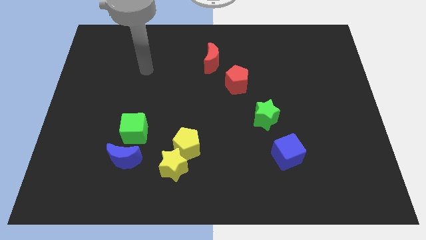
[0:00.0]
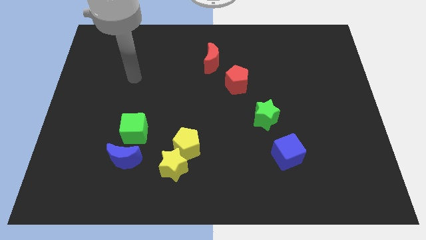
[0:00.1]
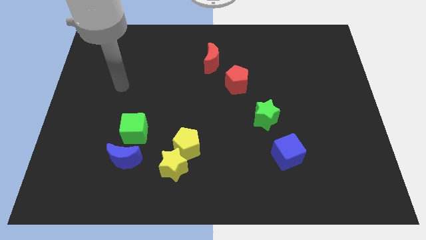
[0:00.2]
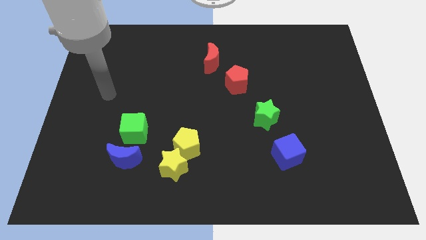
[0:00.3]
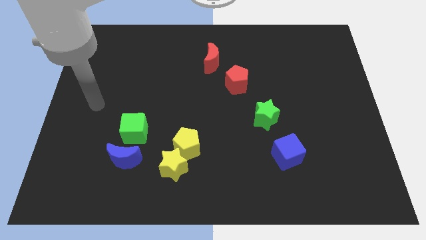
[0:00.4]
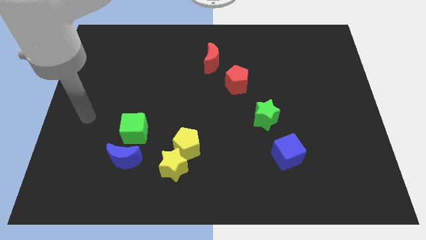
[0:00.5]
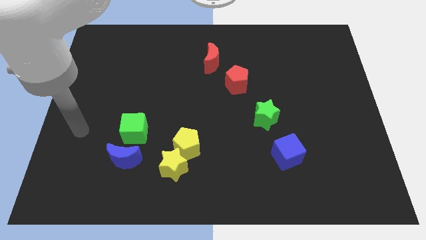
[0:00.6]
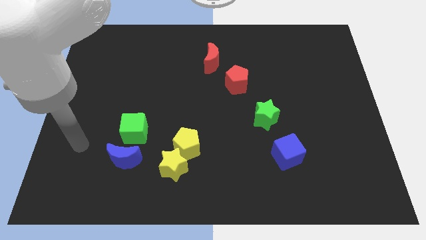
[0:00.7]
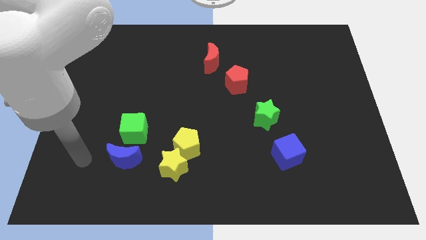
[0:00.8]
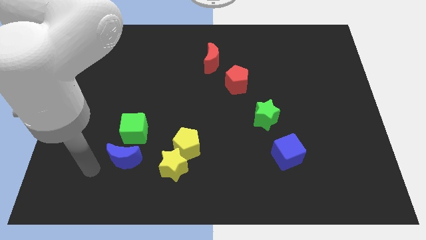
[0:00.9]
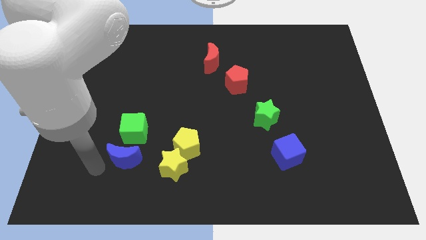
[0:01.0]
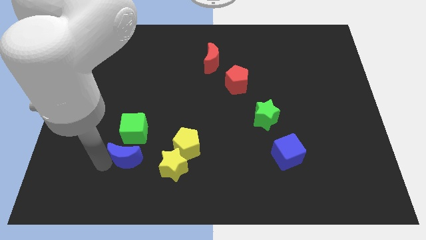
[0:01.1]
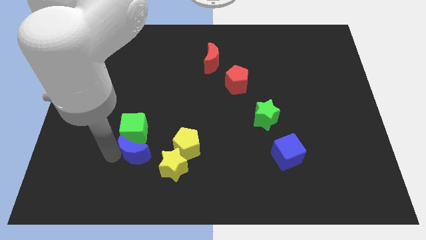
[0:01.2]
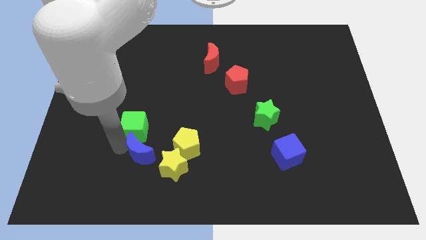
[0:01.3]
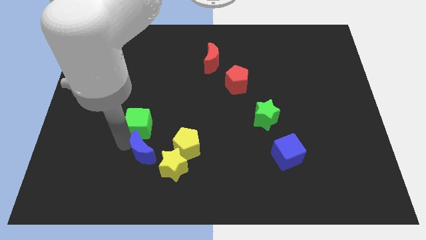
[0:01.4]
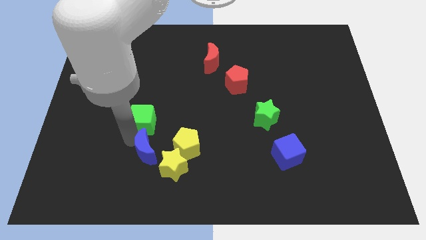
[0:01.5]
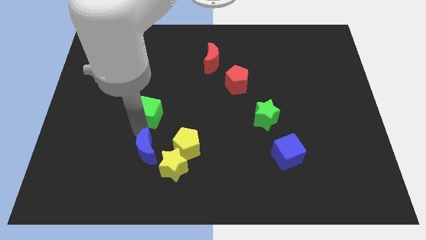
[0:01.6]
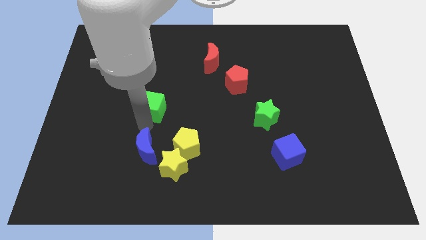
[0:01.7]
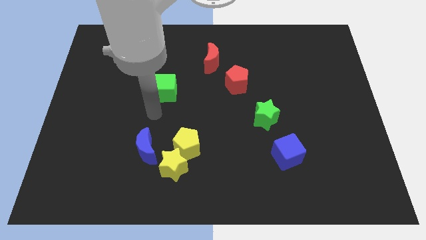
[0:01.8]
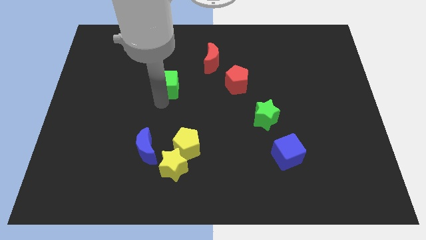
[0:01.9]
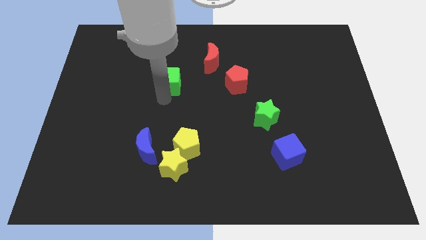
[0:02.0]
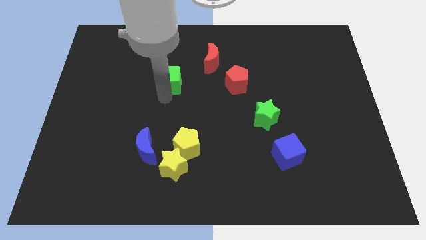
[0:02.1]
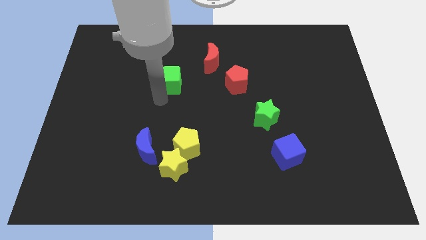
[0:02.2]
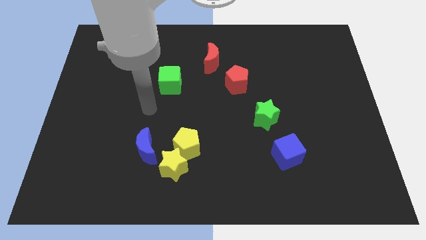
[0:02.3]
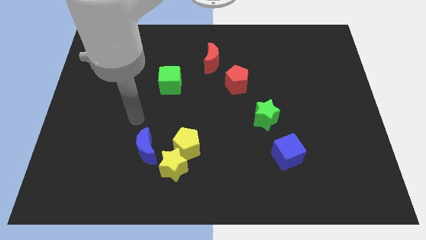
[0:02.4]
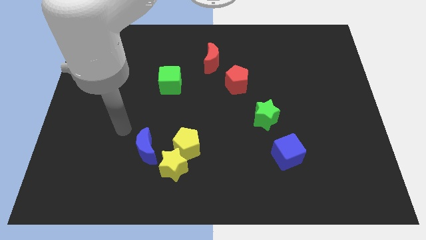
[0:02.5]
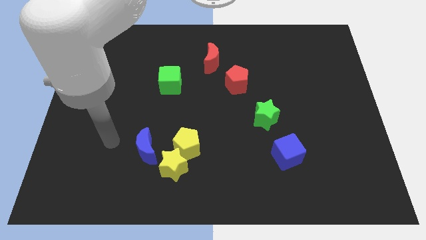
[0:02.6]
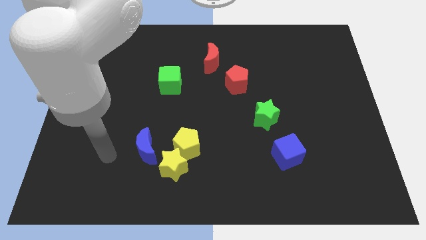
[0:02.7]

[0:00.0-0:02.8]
separate the green cube towards red moon

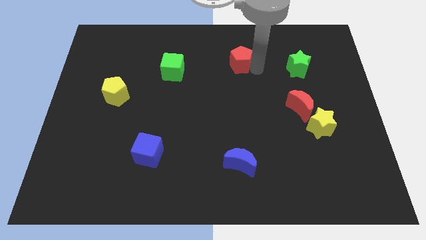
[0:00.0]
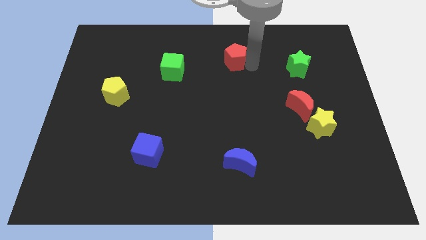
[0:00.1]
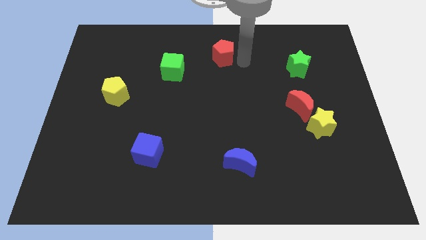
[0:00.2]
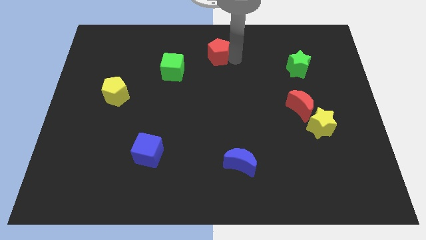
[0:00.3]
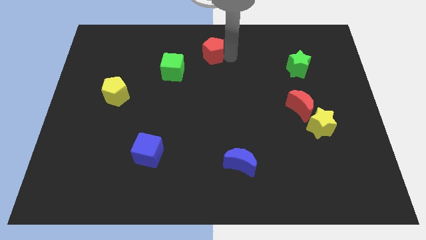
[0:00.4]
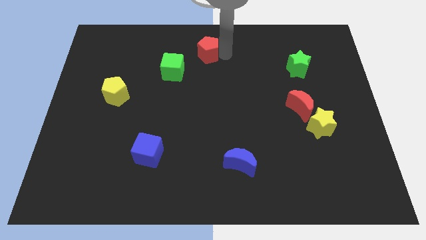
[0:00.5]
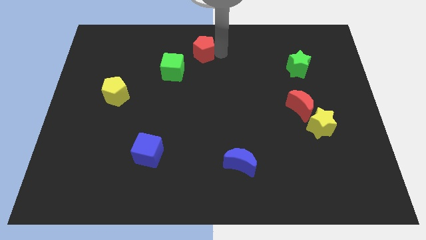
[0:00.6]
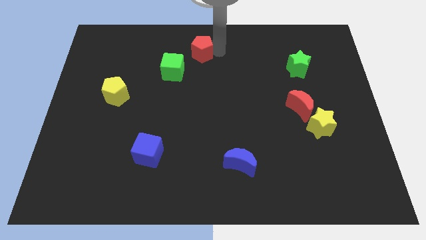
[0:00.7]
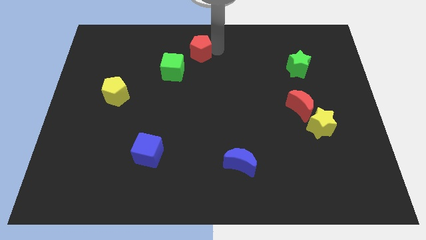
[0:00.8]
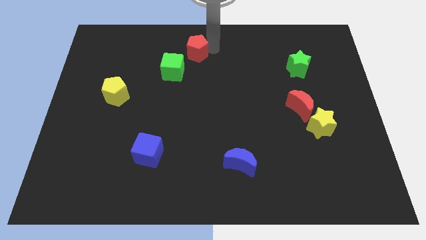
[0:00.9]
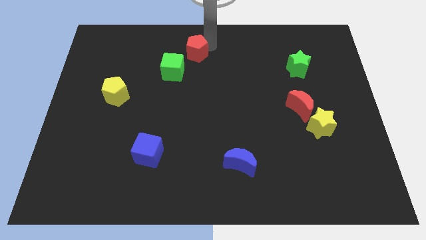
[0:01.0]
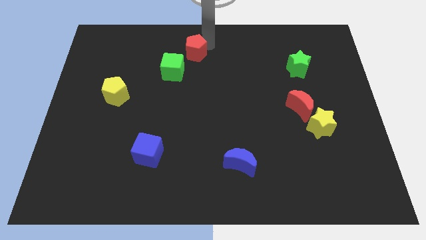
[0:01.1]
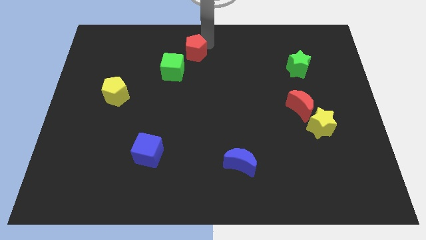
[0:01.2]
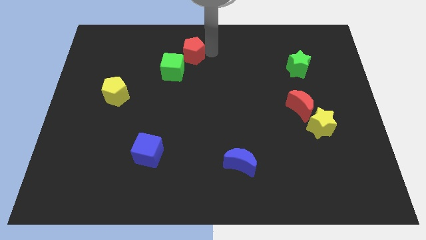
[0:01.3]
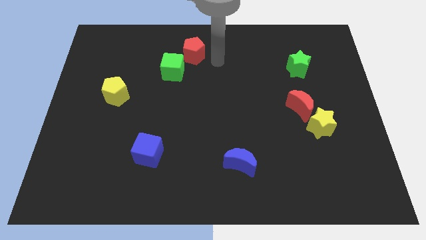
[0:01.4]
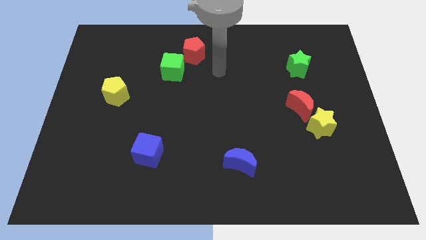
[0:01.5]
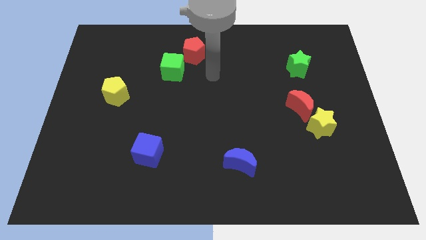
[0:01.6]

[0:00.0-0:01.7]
move the red pentagon near to the green cube

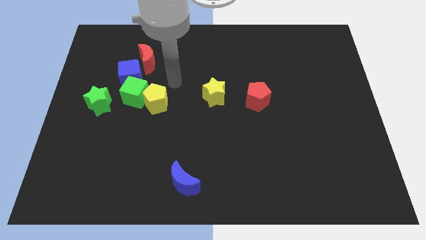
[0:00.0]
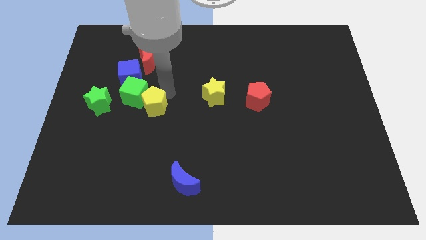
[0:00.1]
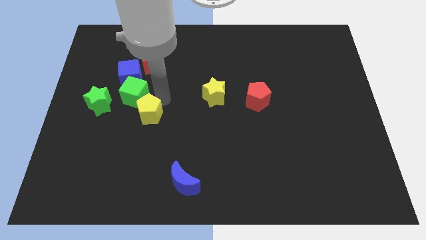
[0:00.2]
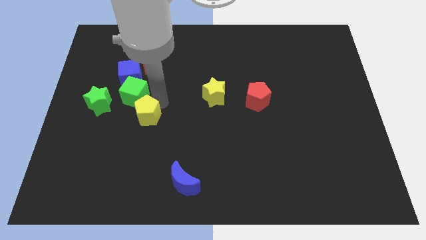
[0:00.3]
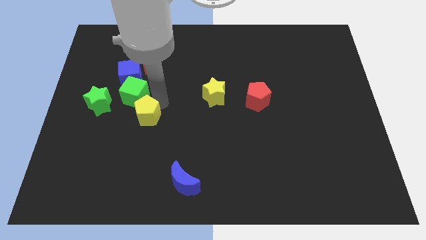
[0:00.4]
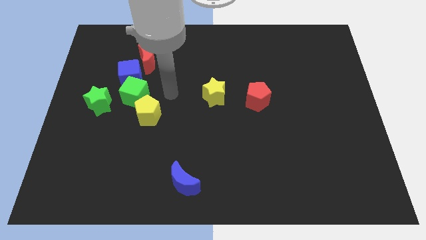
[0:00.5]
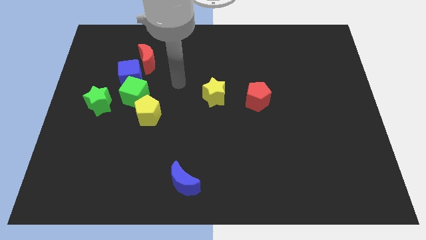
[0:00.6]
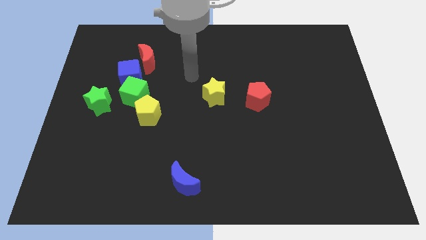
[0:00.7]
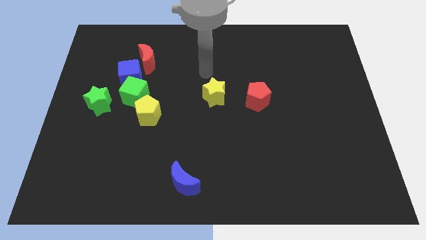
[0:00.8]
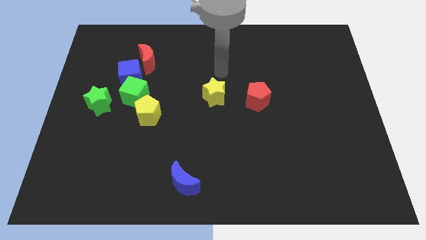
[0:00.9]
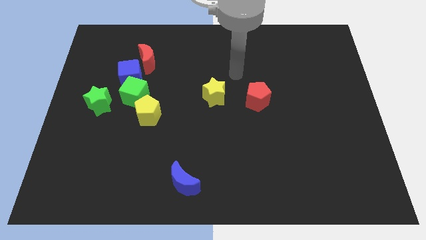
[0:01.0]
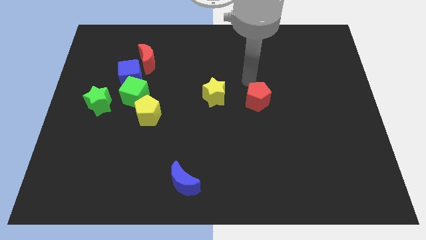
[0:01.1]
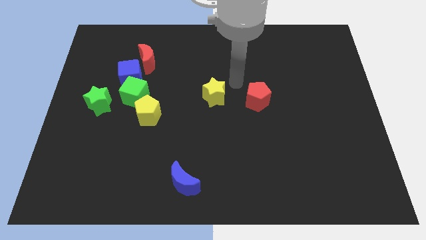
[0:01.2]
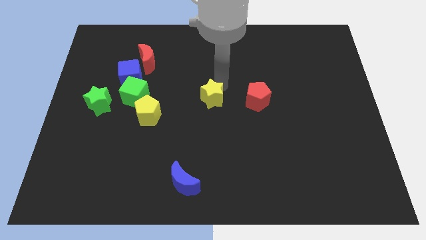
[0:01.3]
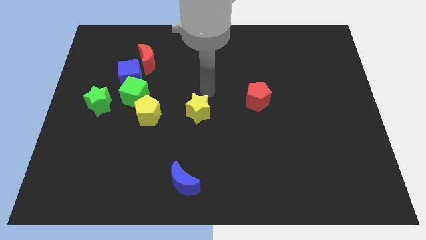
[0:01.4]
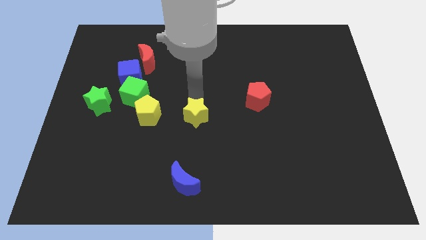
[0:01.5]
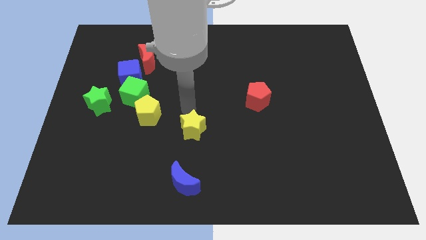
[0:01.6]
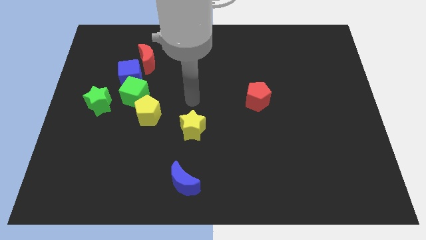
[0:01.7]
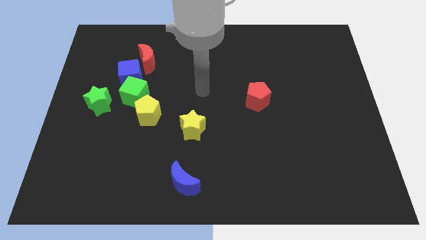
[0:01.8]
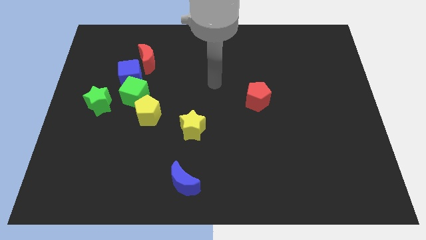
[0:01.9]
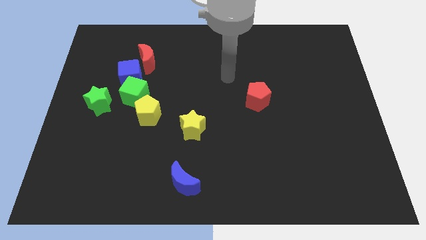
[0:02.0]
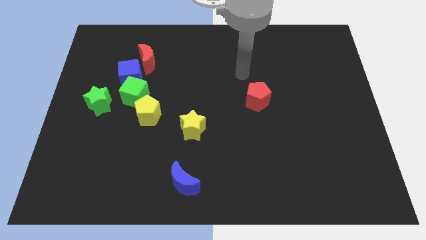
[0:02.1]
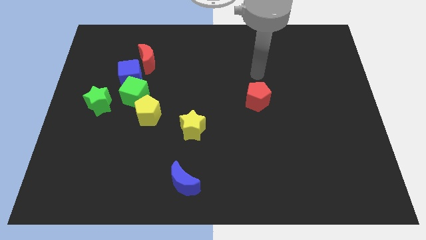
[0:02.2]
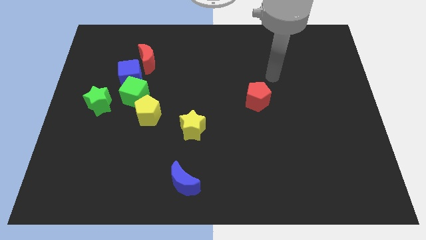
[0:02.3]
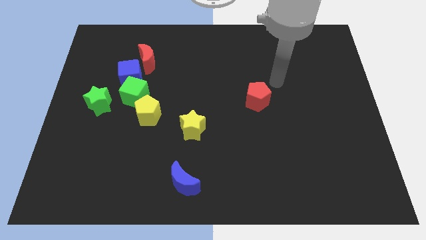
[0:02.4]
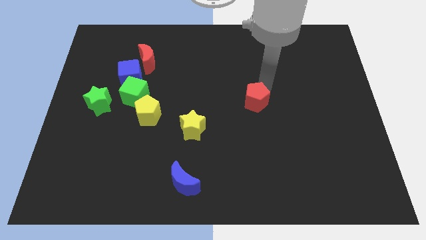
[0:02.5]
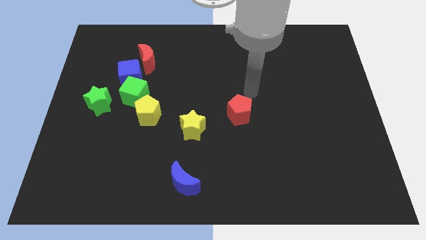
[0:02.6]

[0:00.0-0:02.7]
move yellow star to the top of blue crescent

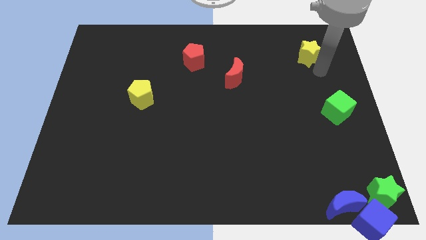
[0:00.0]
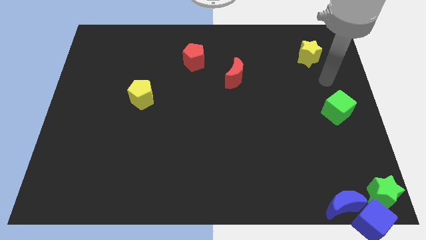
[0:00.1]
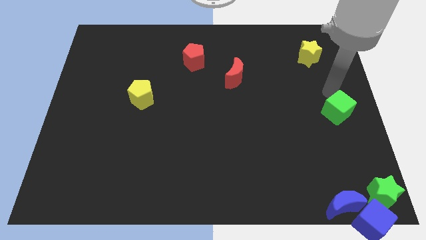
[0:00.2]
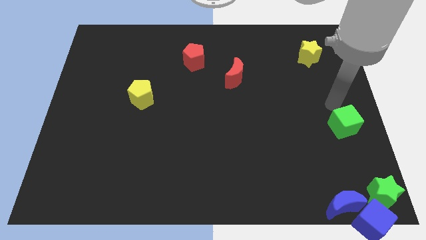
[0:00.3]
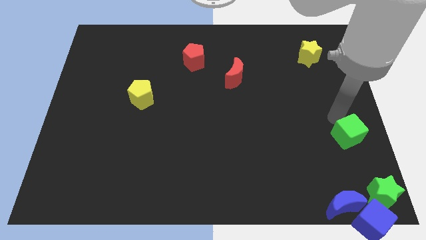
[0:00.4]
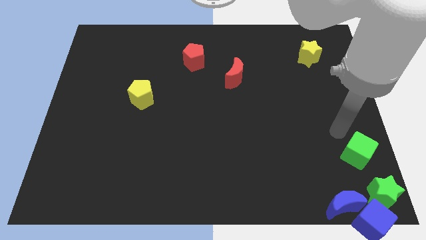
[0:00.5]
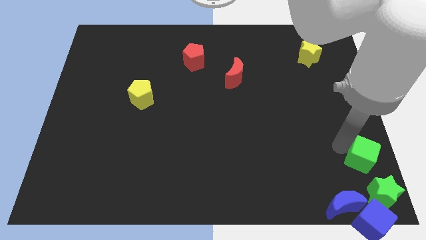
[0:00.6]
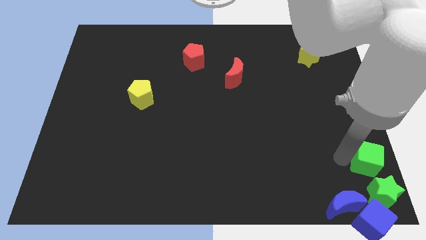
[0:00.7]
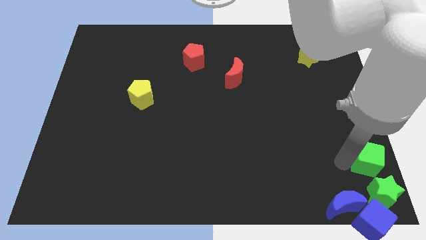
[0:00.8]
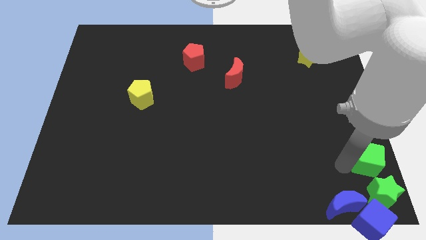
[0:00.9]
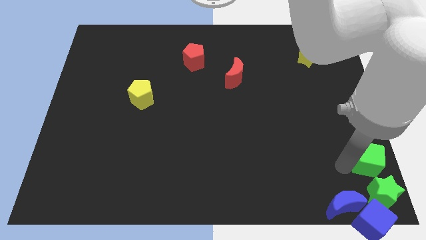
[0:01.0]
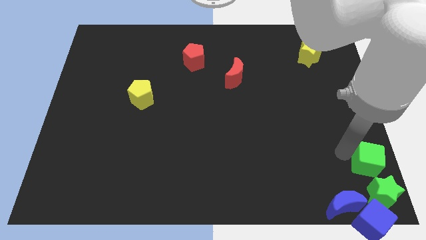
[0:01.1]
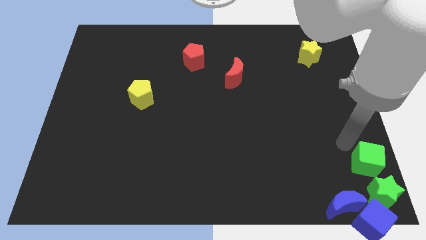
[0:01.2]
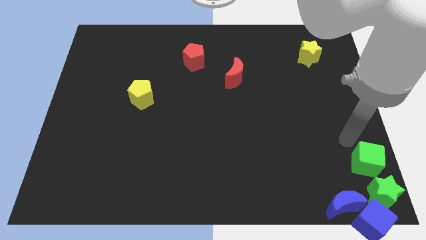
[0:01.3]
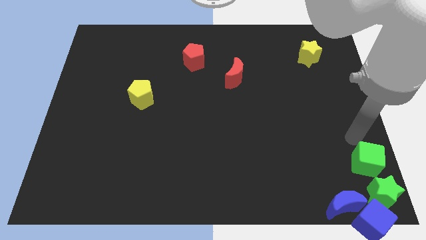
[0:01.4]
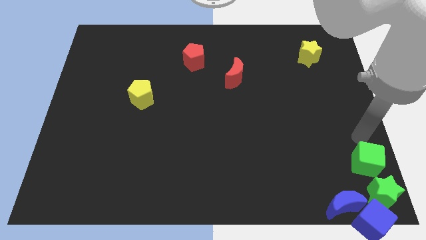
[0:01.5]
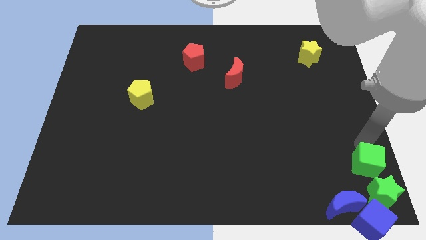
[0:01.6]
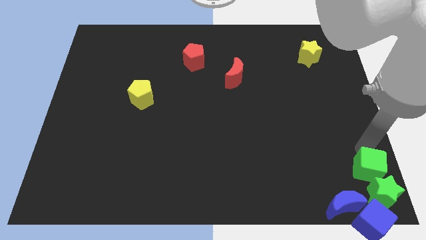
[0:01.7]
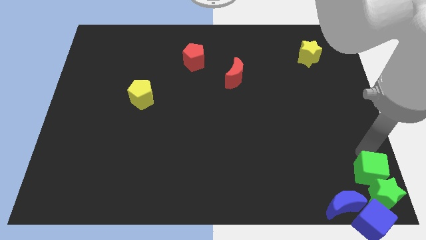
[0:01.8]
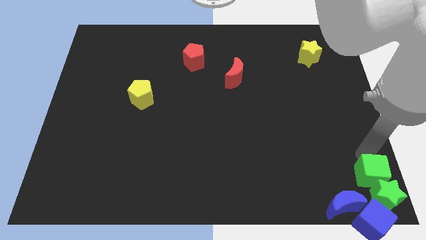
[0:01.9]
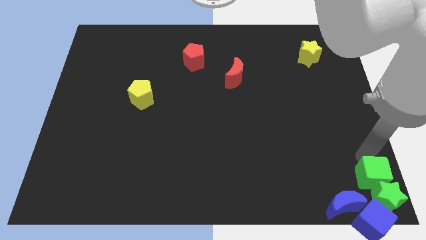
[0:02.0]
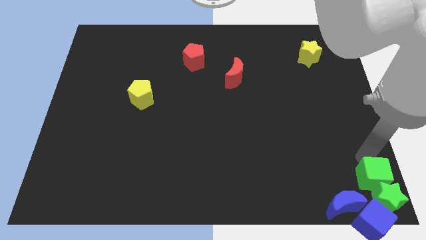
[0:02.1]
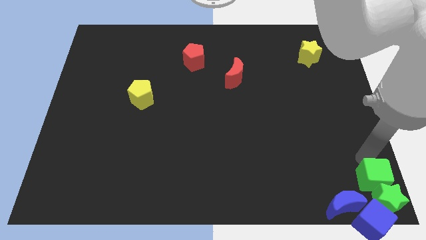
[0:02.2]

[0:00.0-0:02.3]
push the green cube into green star
